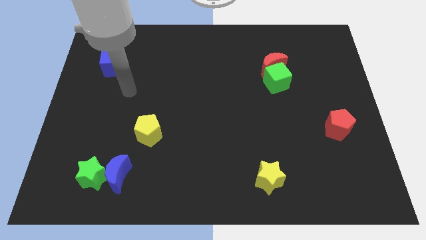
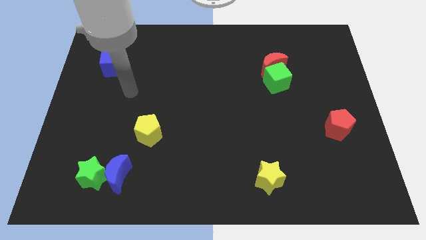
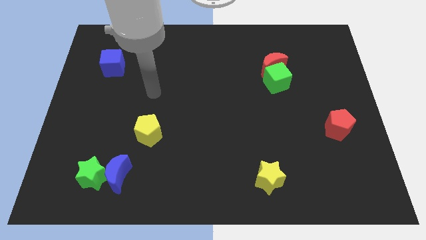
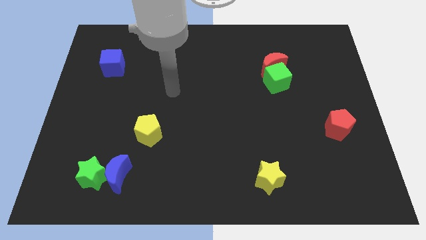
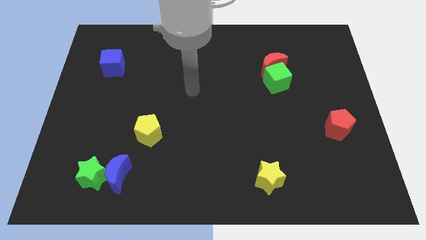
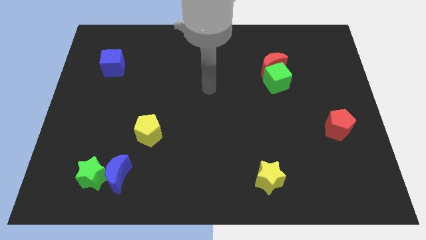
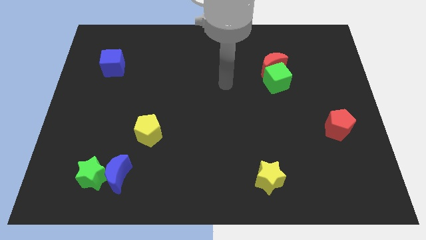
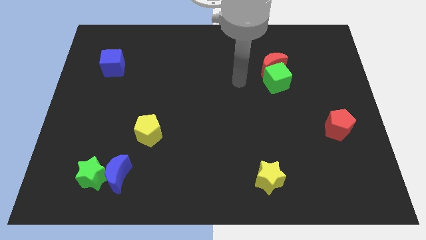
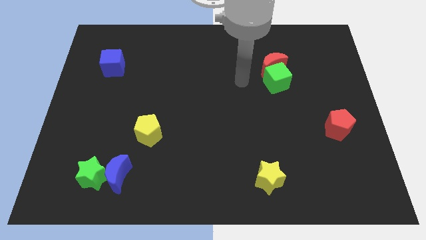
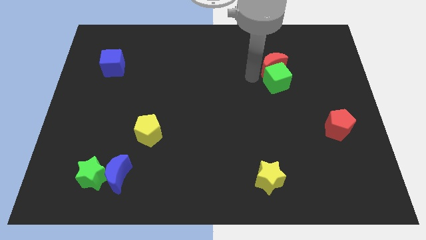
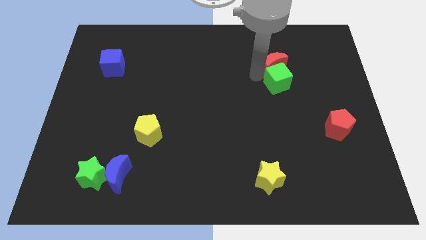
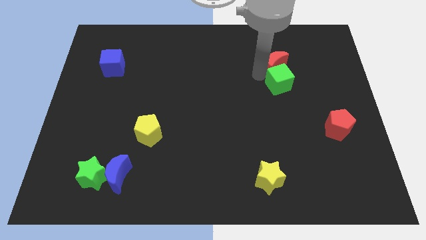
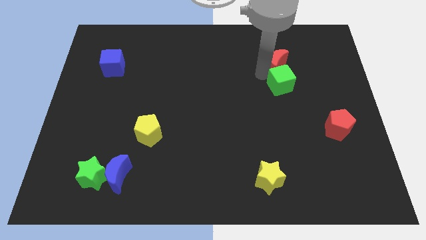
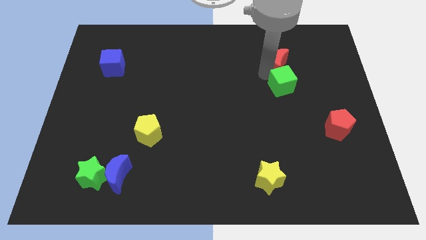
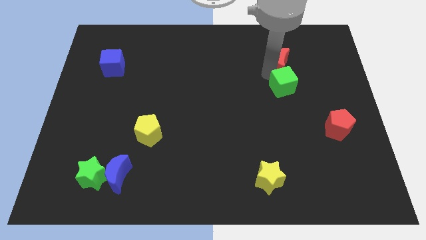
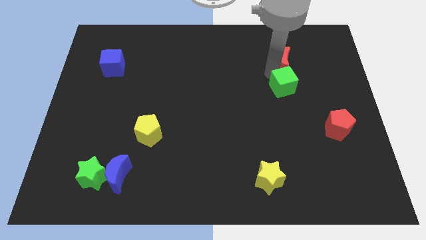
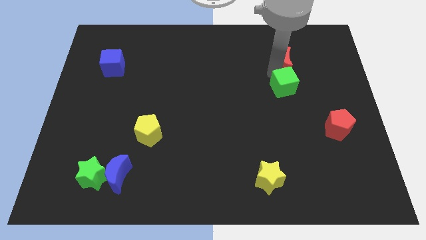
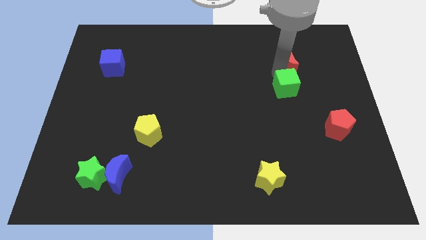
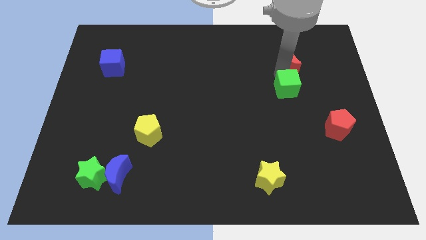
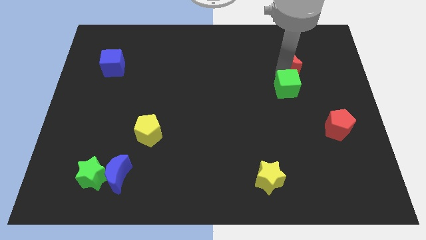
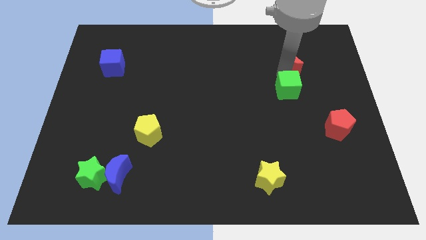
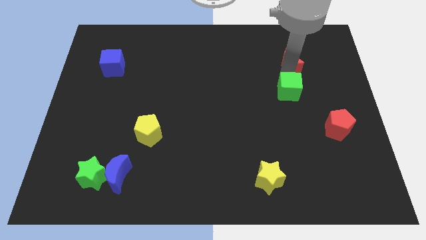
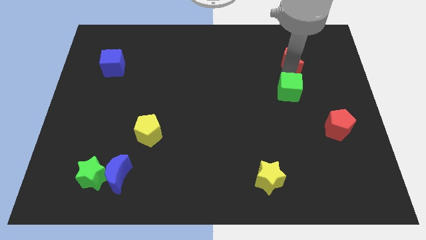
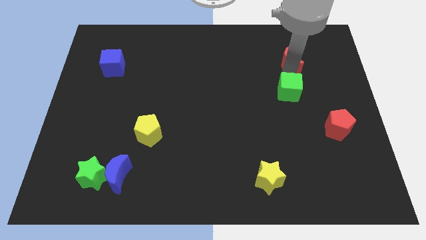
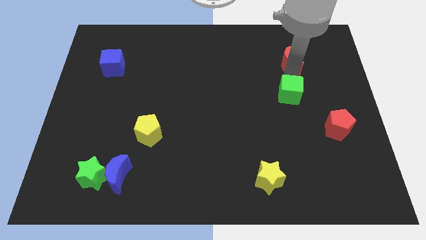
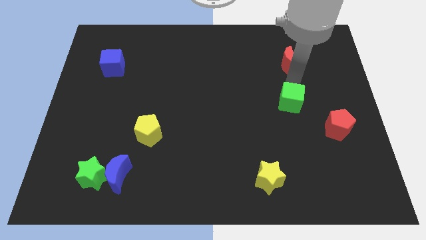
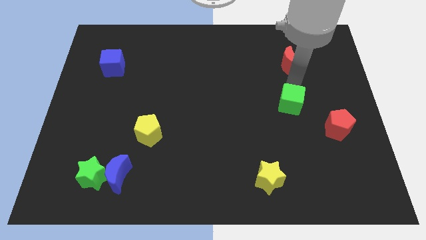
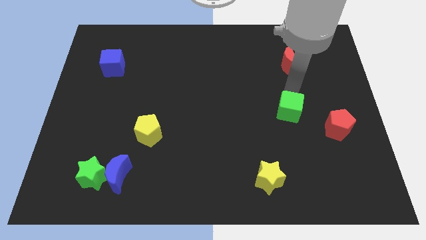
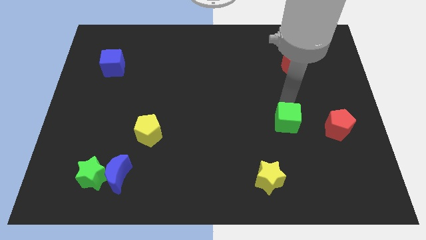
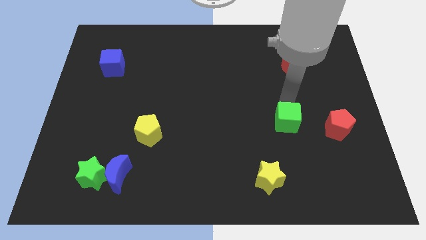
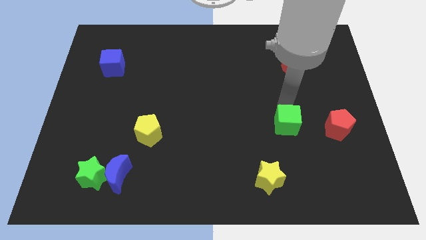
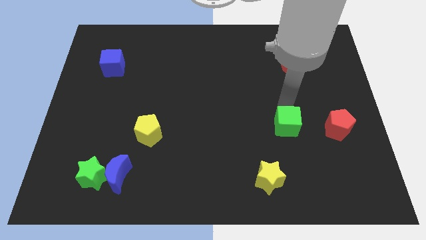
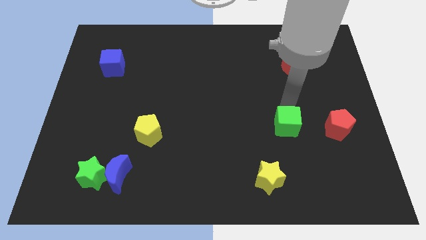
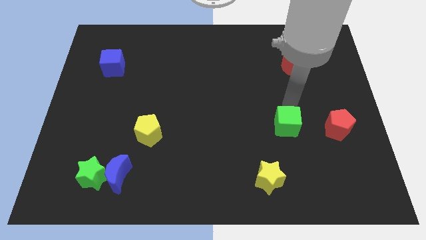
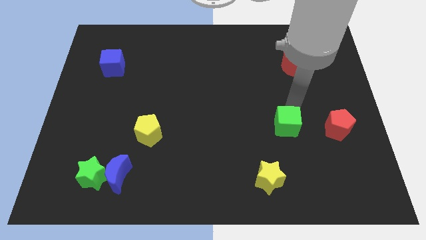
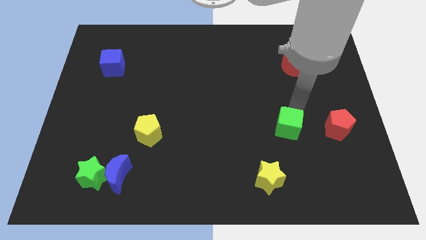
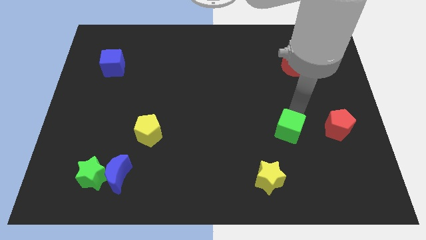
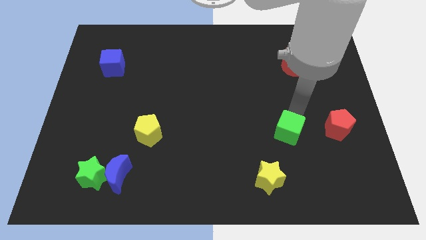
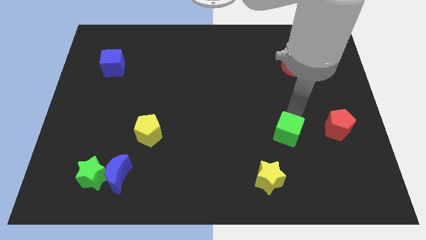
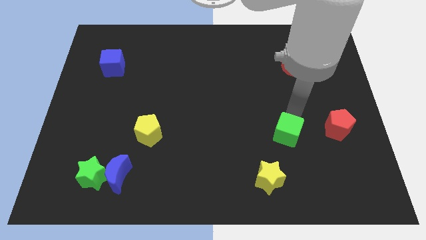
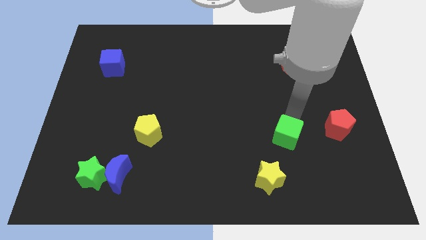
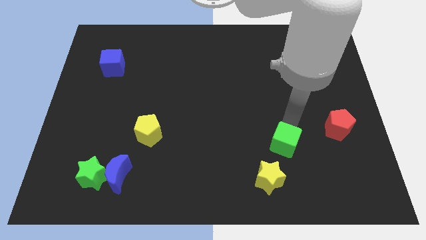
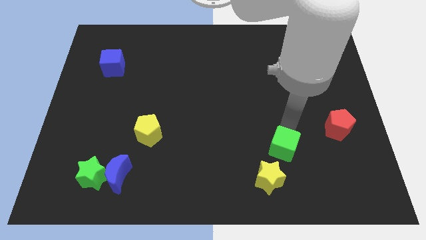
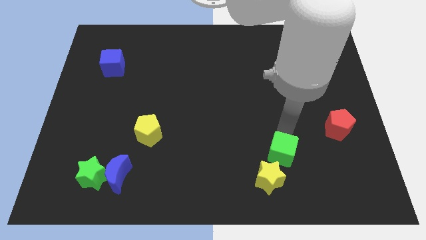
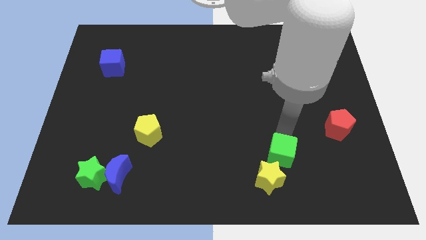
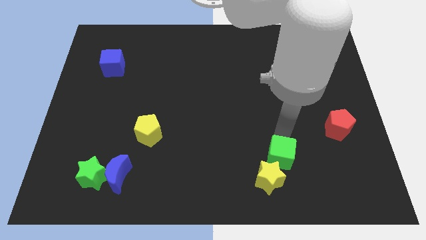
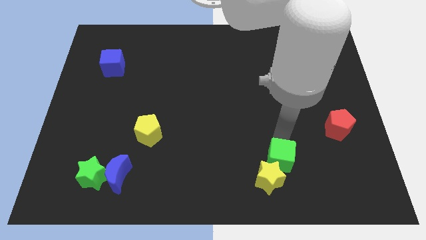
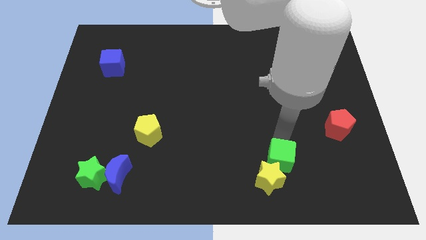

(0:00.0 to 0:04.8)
put the green cube close to the yellow star

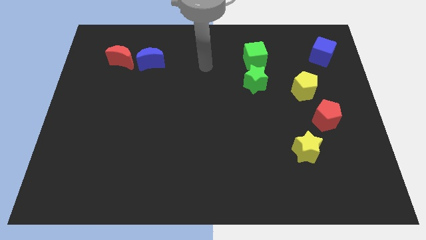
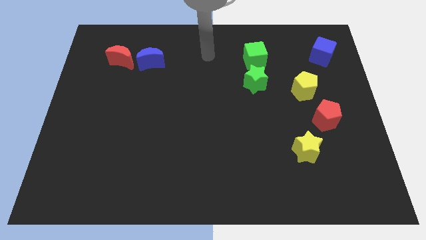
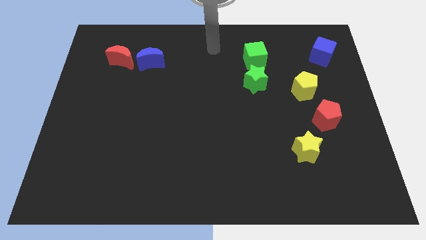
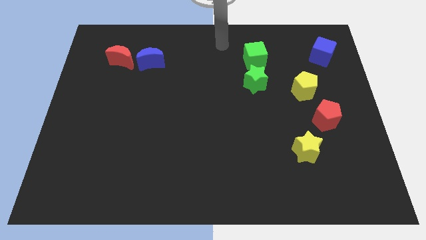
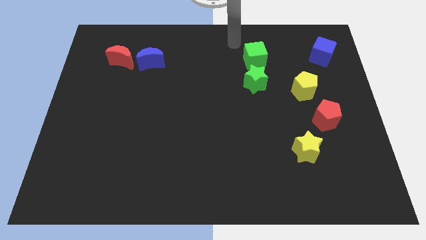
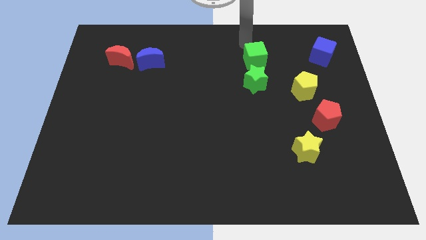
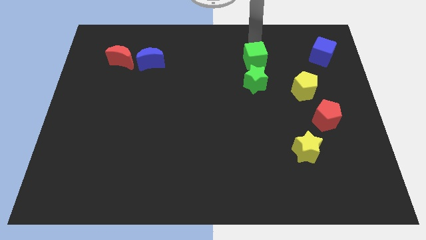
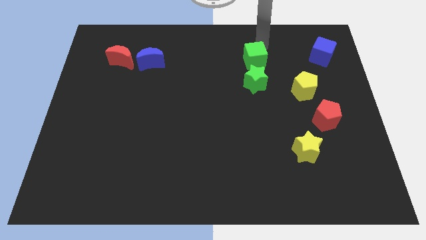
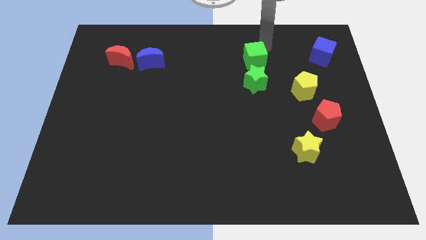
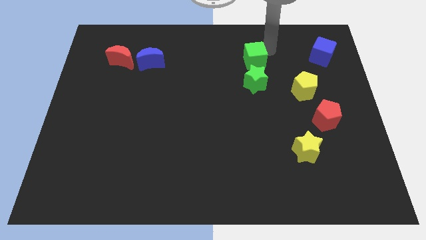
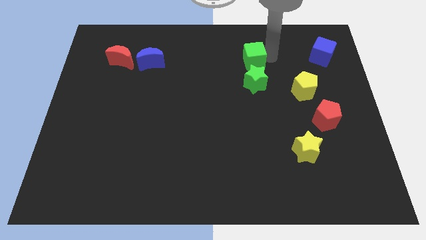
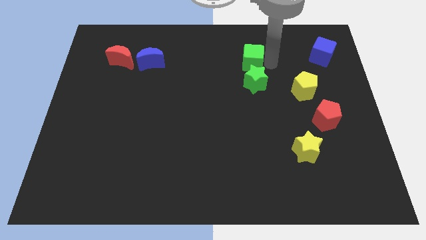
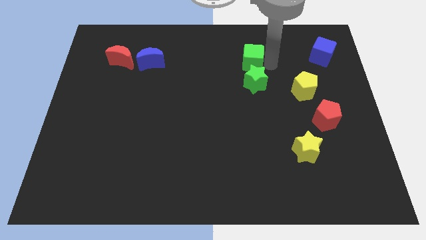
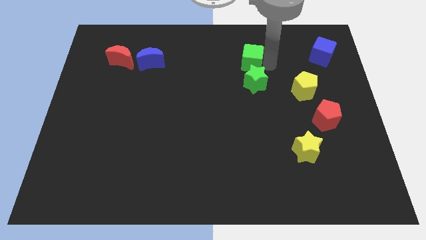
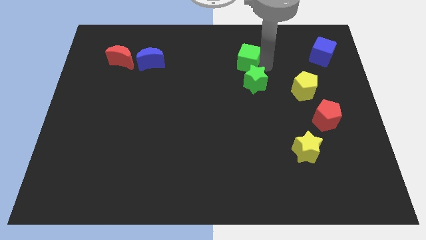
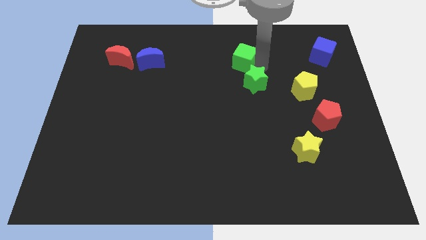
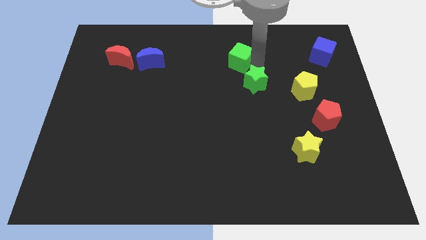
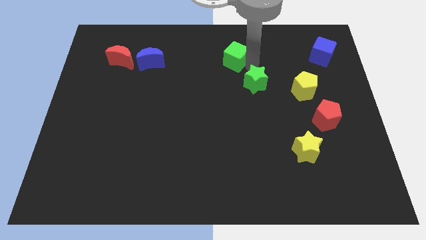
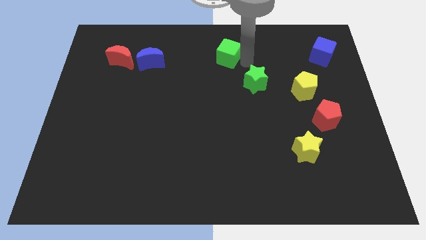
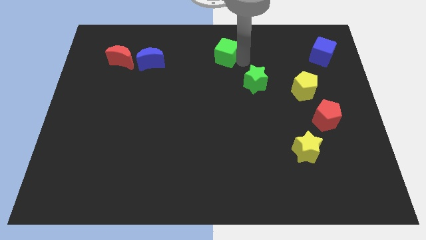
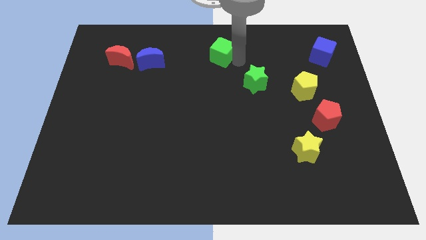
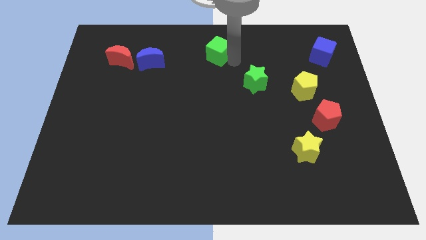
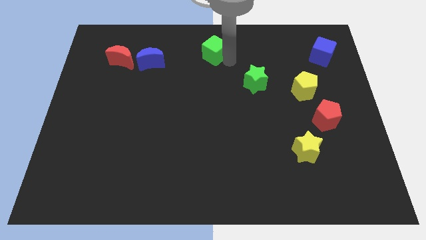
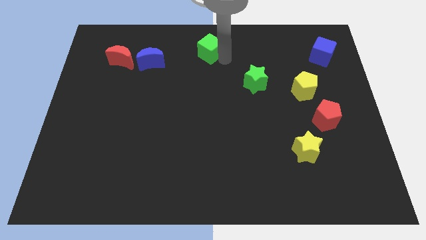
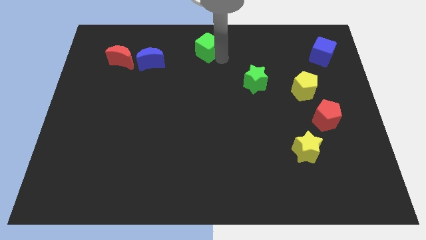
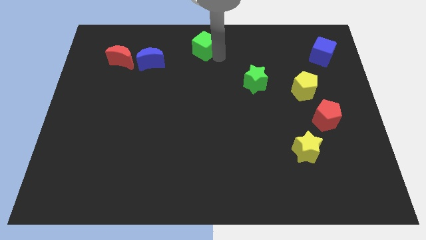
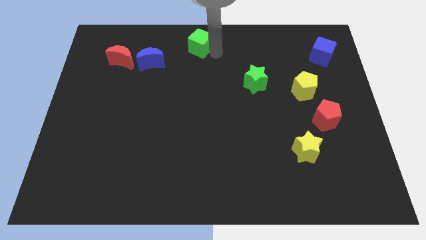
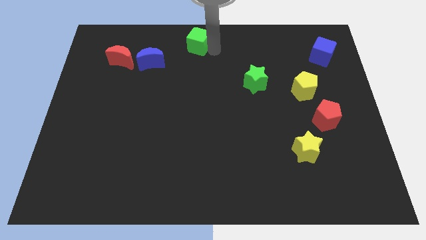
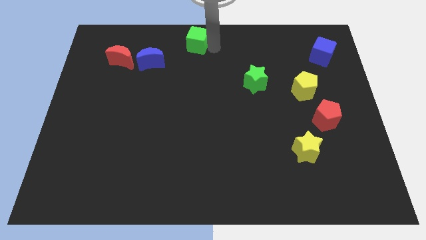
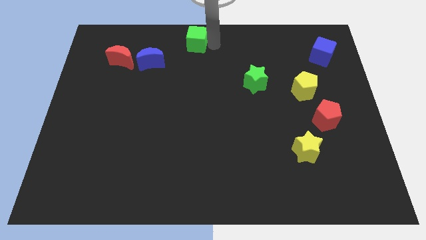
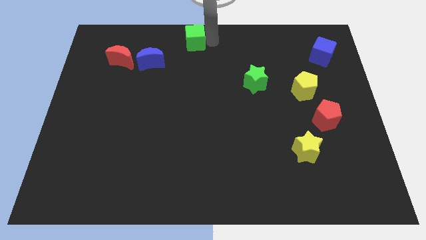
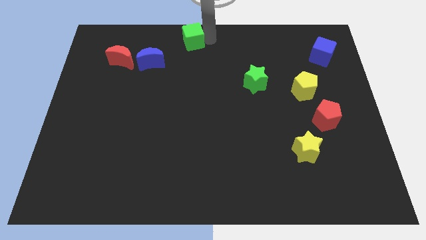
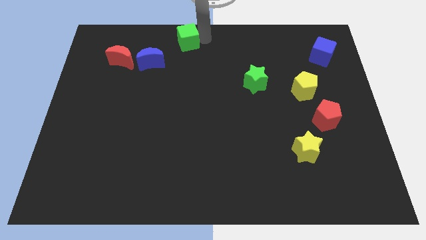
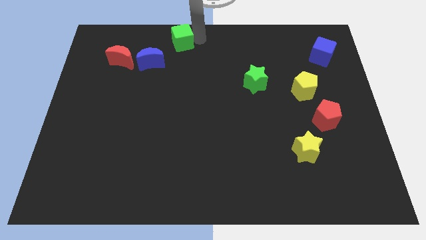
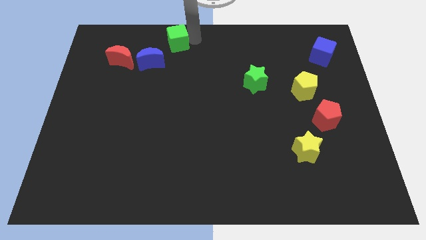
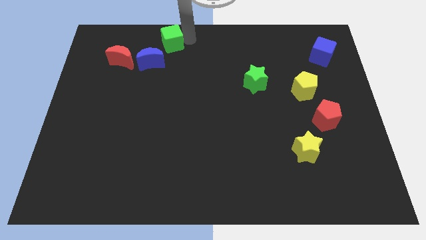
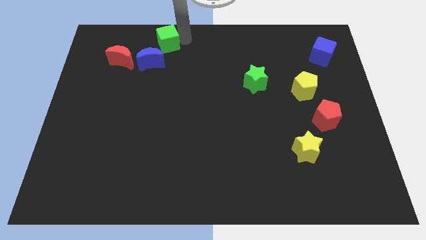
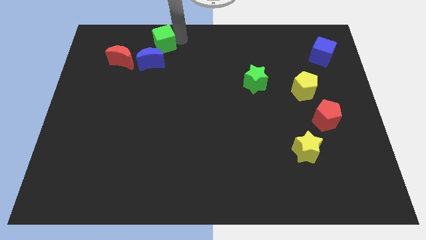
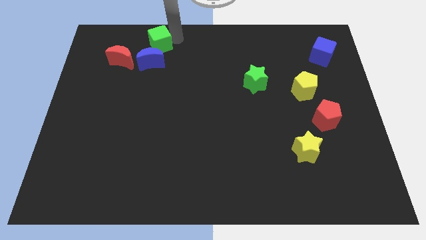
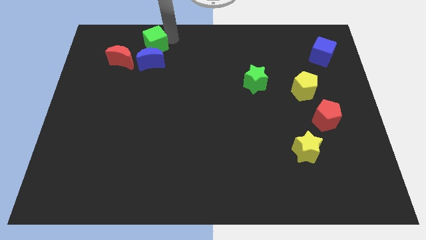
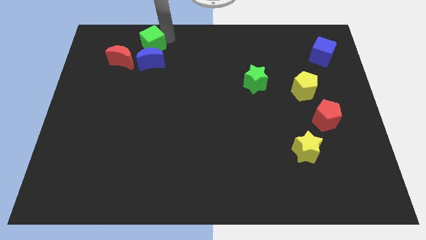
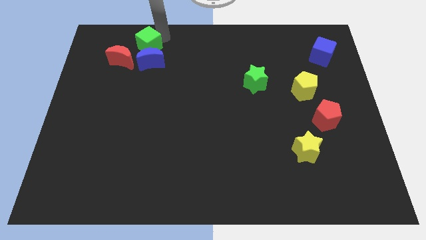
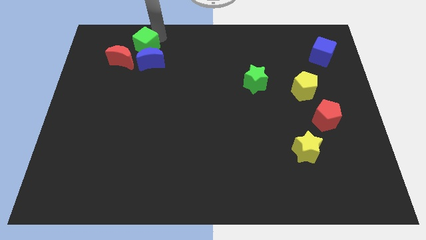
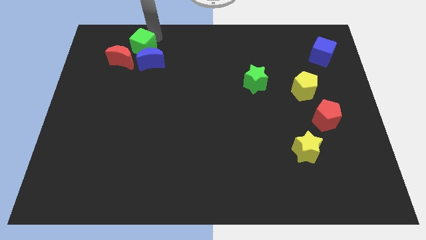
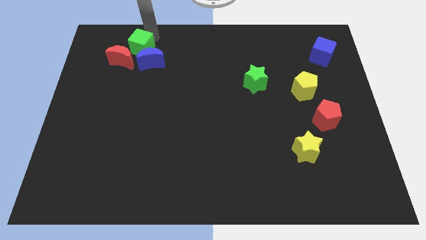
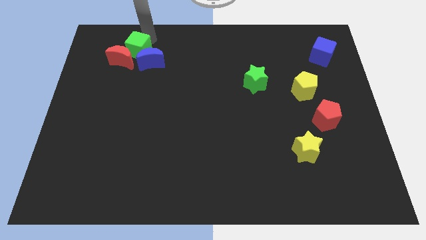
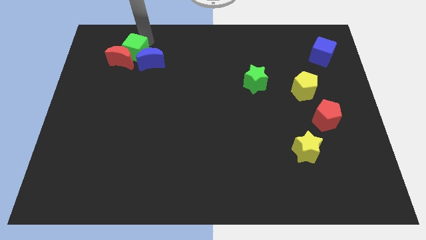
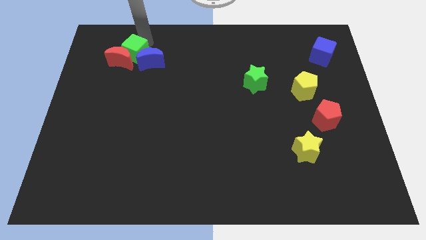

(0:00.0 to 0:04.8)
move the green cube close to the red moon
